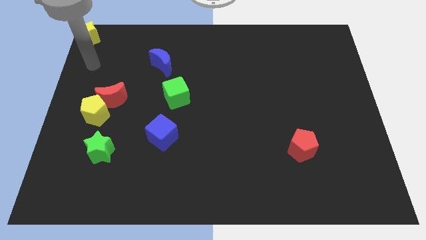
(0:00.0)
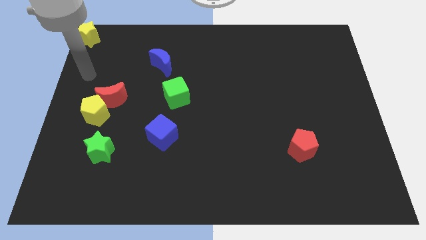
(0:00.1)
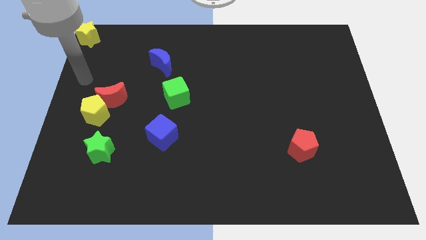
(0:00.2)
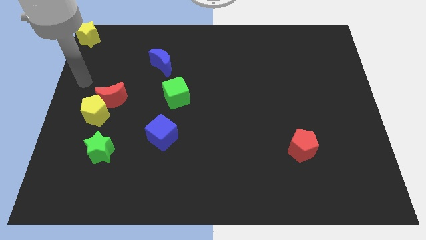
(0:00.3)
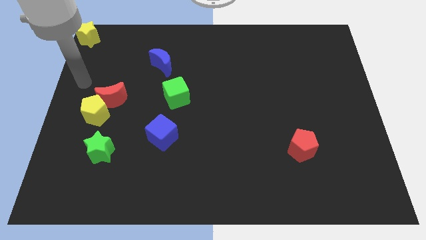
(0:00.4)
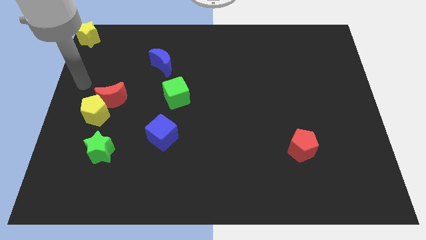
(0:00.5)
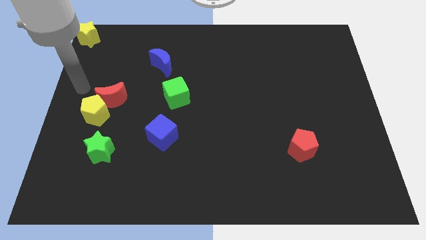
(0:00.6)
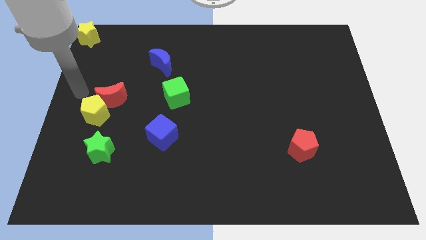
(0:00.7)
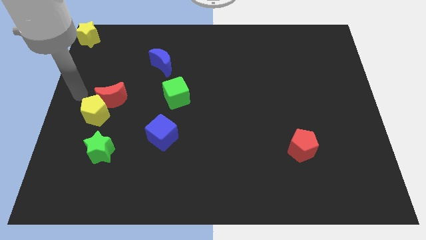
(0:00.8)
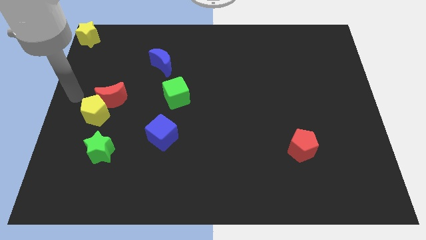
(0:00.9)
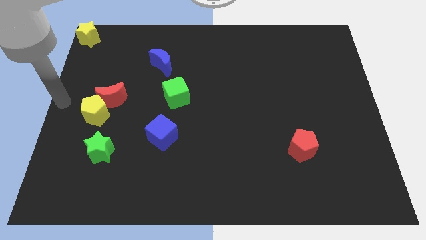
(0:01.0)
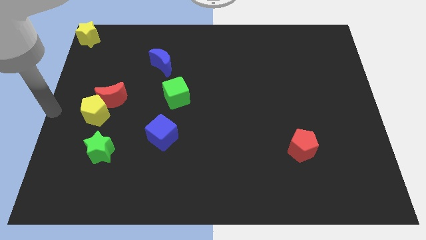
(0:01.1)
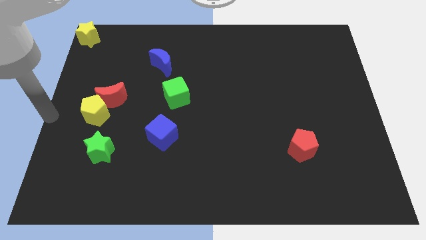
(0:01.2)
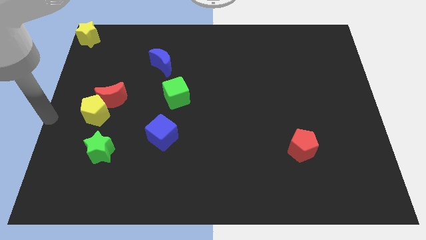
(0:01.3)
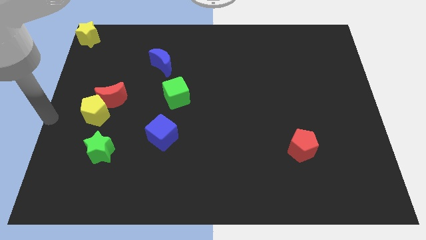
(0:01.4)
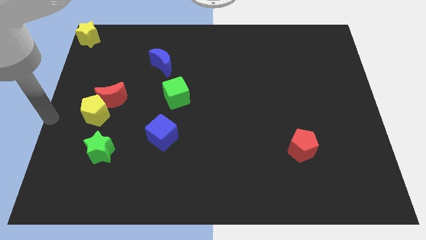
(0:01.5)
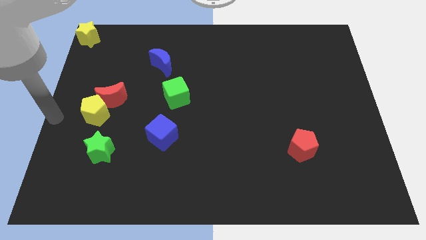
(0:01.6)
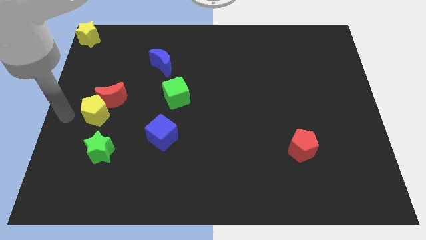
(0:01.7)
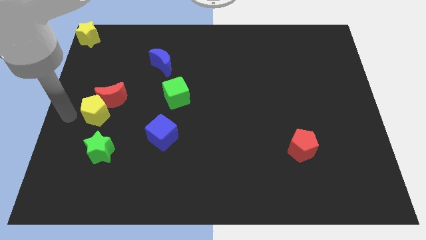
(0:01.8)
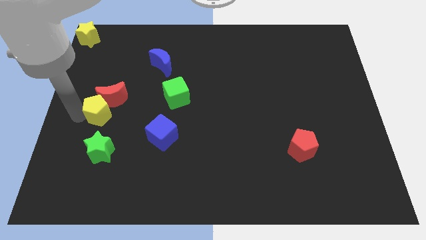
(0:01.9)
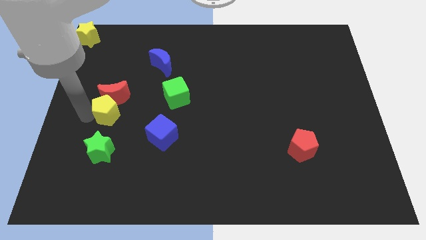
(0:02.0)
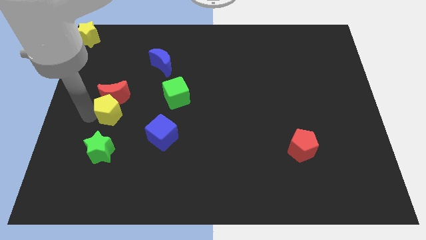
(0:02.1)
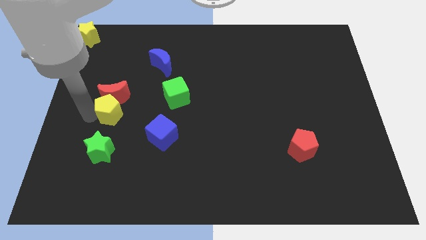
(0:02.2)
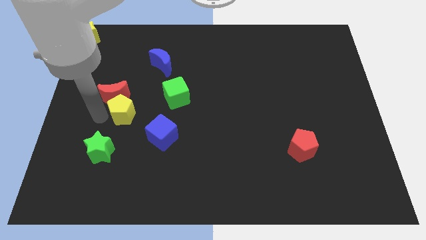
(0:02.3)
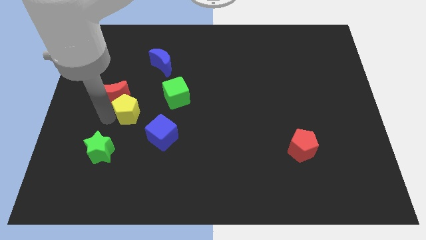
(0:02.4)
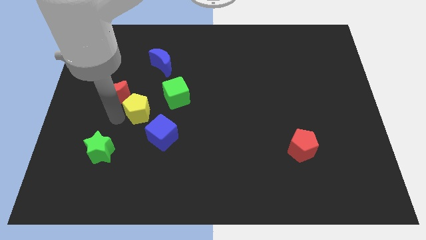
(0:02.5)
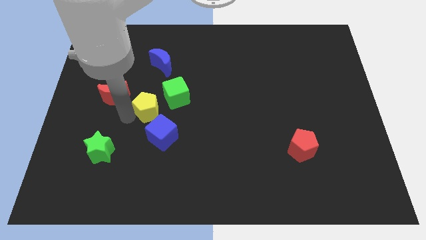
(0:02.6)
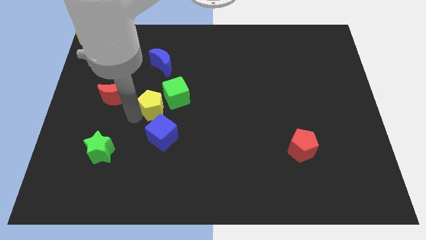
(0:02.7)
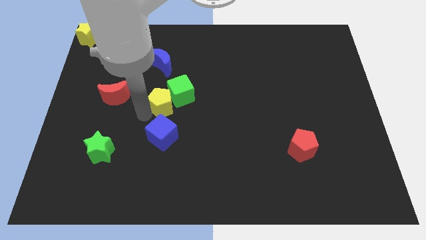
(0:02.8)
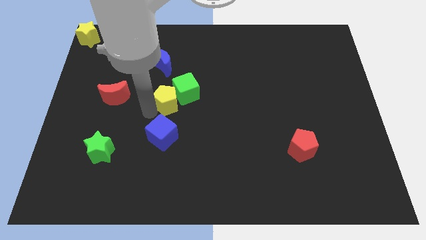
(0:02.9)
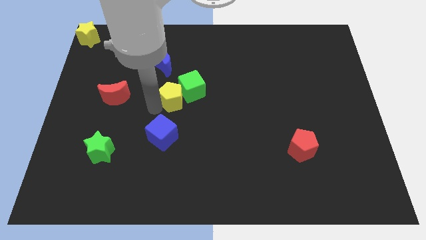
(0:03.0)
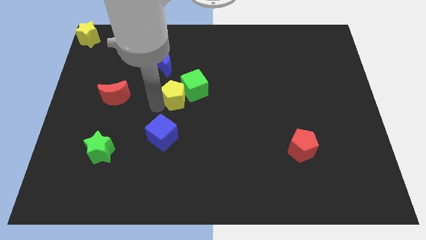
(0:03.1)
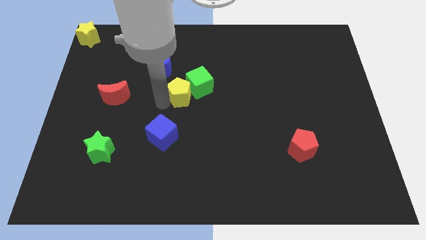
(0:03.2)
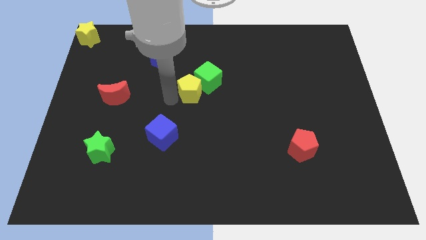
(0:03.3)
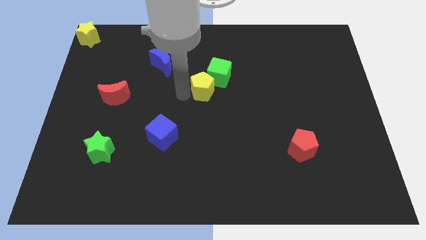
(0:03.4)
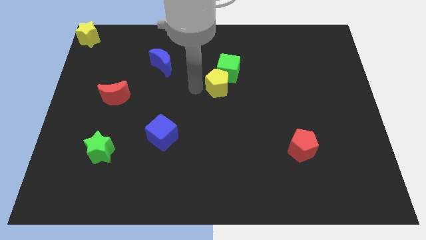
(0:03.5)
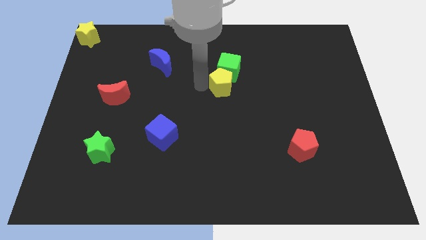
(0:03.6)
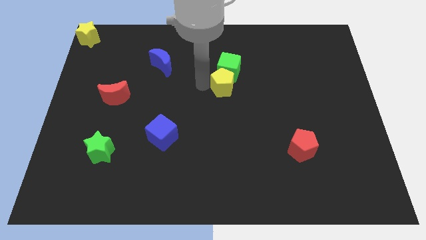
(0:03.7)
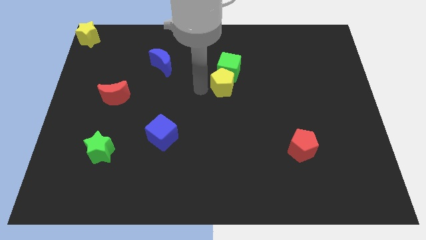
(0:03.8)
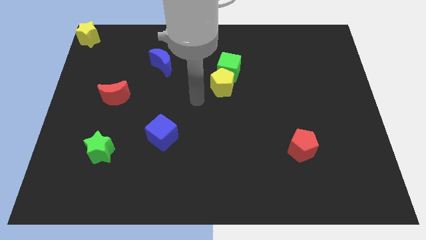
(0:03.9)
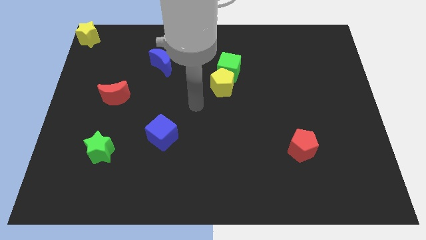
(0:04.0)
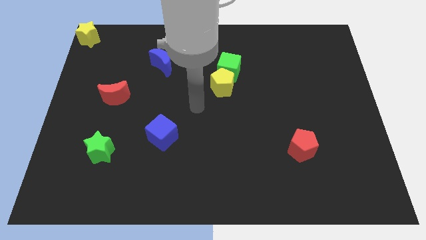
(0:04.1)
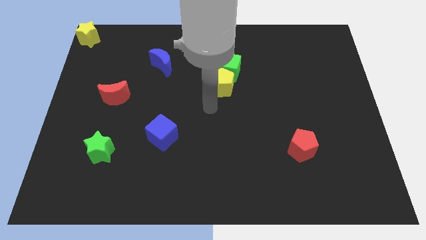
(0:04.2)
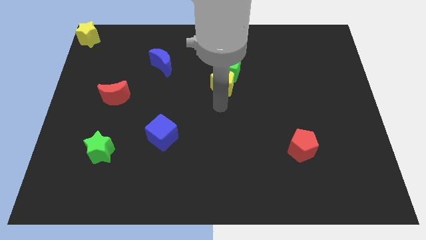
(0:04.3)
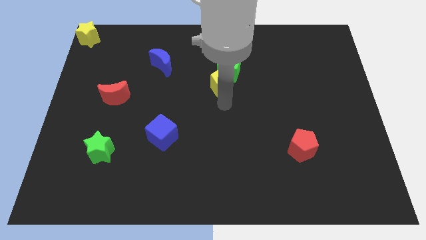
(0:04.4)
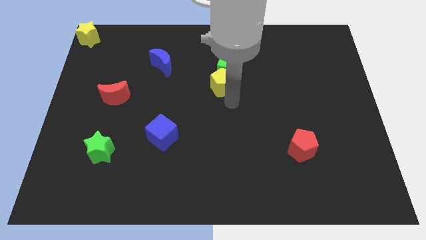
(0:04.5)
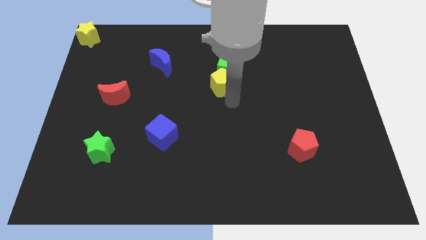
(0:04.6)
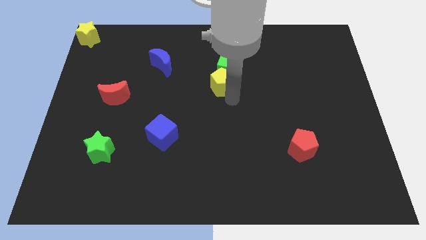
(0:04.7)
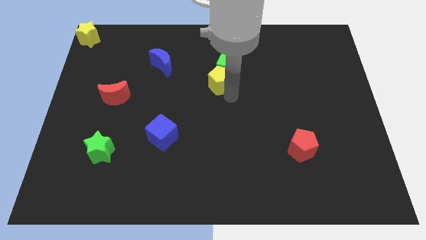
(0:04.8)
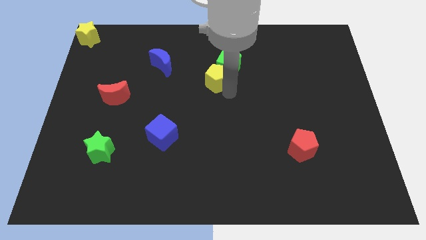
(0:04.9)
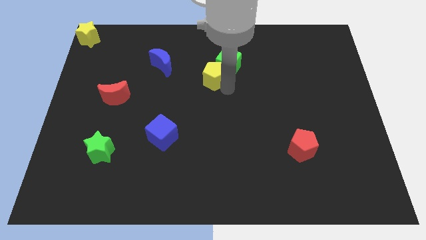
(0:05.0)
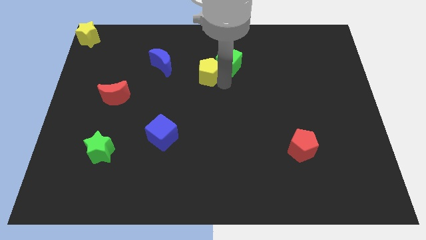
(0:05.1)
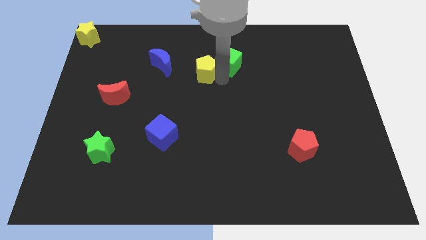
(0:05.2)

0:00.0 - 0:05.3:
move the yellow pentagon to the left of the green cube

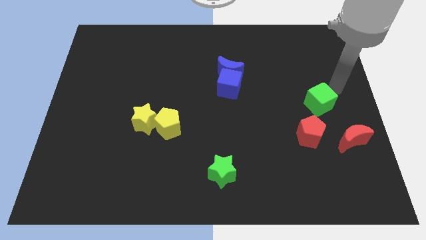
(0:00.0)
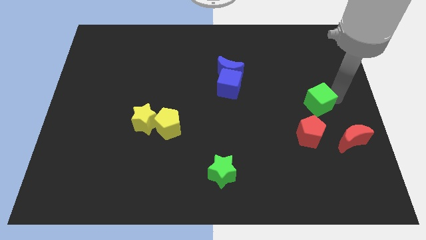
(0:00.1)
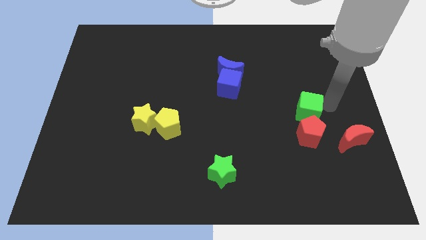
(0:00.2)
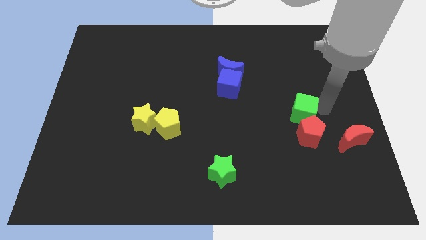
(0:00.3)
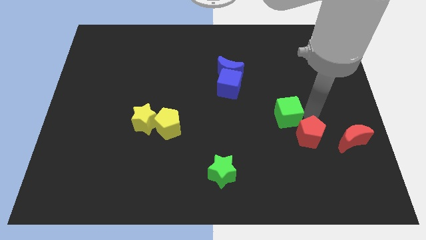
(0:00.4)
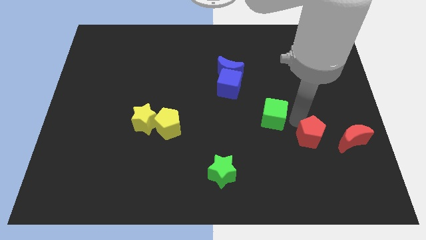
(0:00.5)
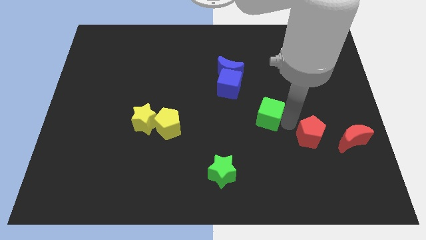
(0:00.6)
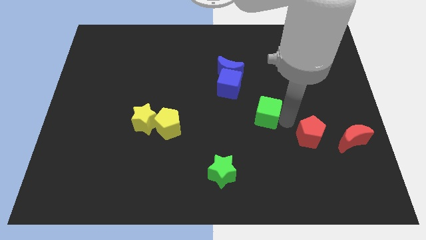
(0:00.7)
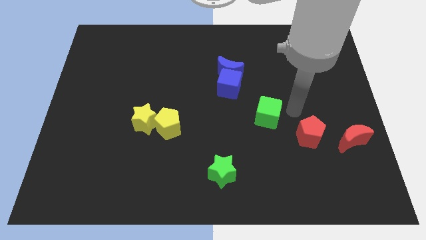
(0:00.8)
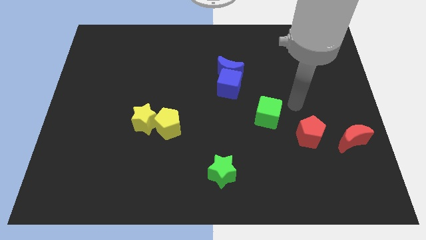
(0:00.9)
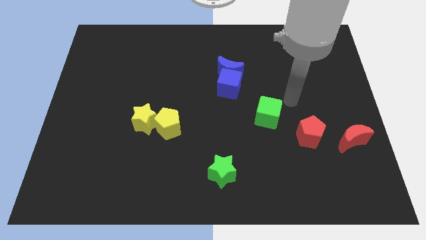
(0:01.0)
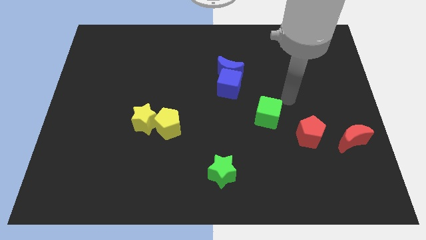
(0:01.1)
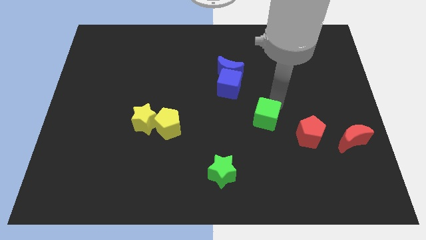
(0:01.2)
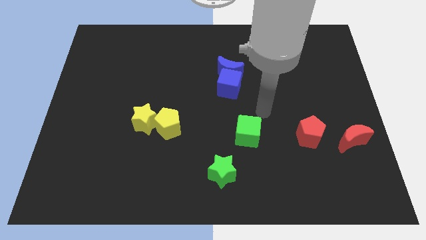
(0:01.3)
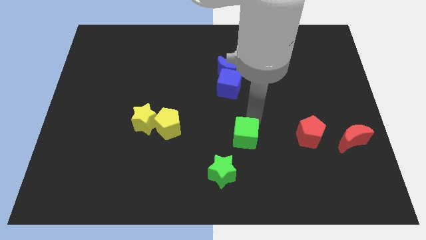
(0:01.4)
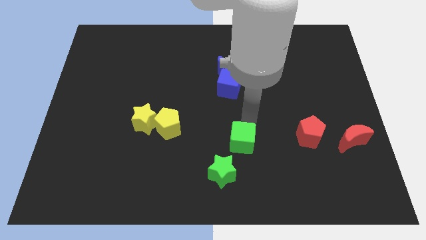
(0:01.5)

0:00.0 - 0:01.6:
push the green cube towards the green star

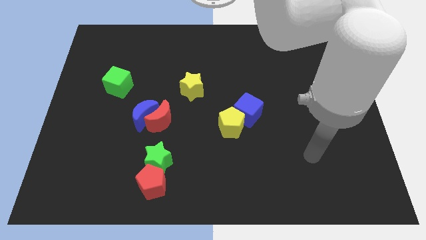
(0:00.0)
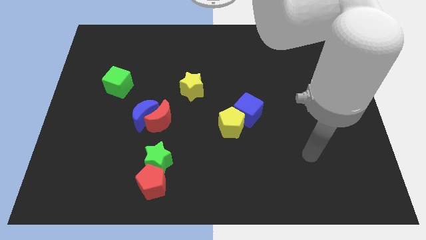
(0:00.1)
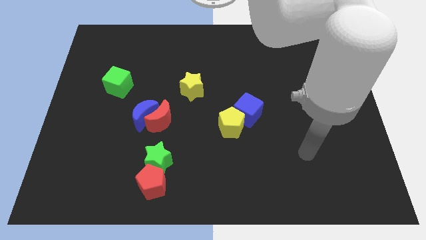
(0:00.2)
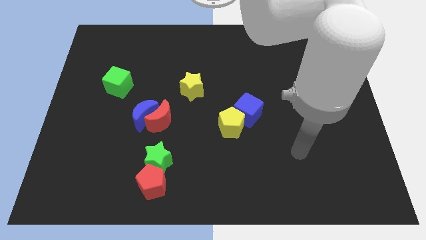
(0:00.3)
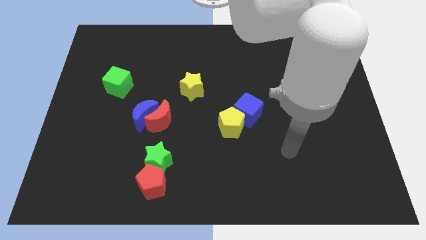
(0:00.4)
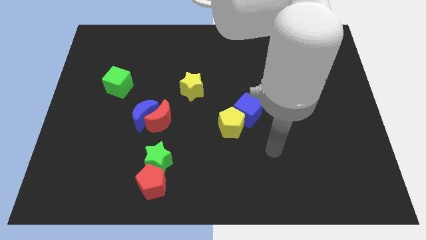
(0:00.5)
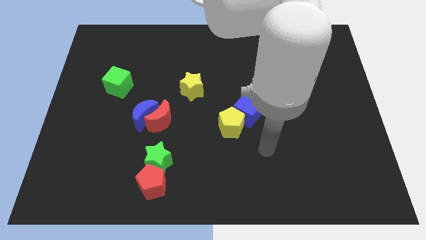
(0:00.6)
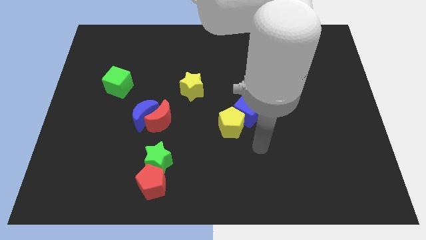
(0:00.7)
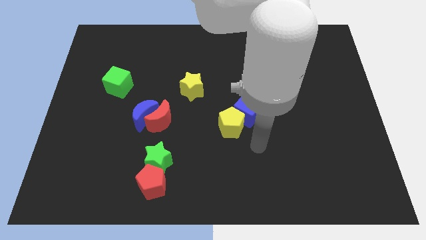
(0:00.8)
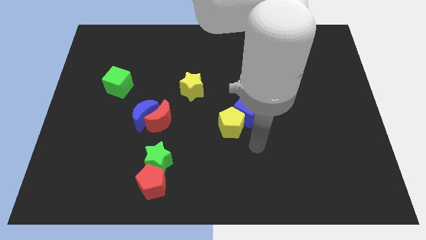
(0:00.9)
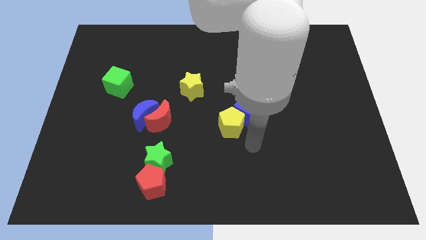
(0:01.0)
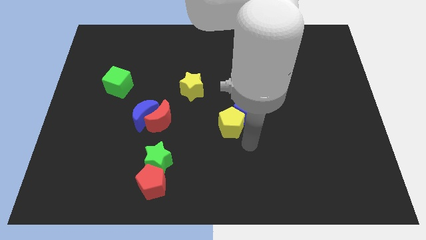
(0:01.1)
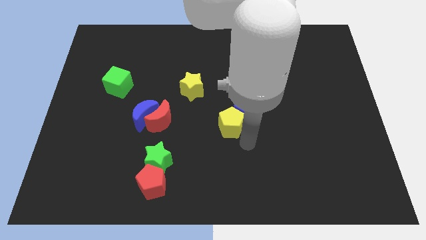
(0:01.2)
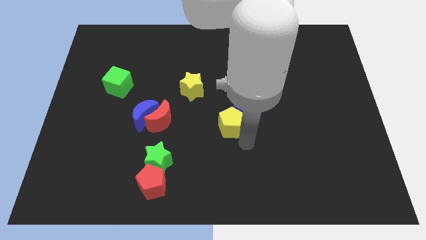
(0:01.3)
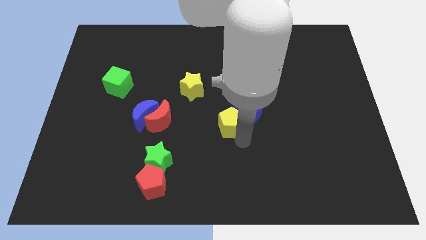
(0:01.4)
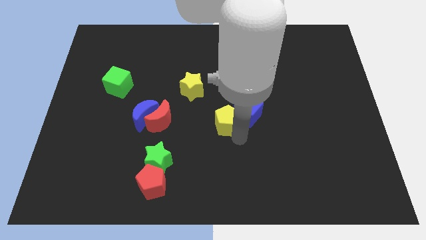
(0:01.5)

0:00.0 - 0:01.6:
slide the yellow pentagon towards the yellow star

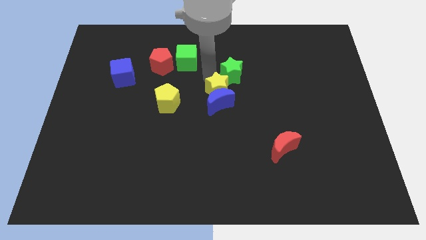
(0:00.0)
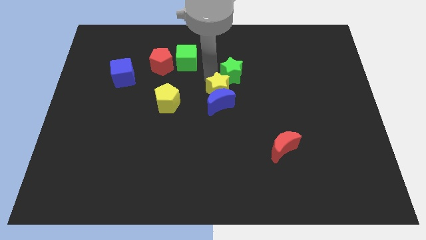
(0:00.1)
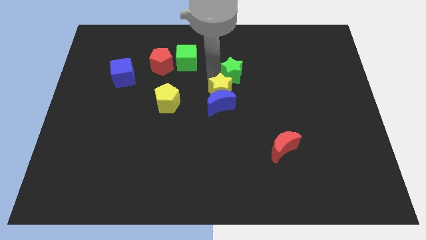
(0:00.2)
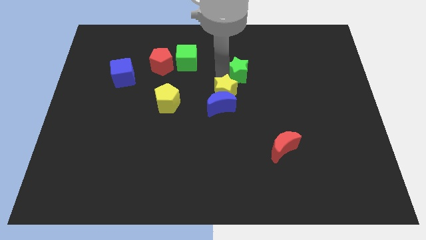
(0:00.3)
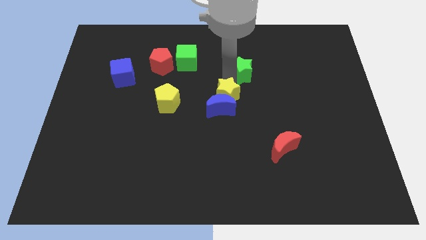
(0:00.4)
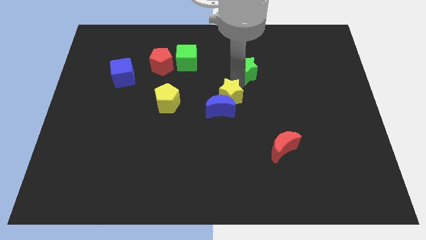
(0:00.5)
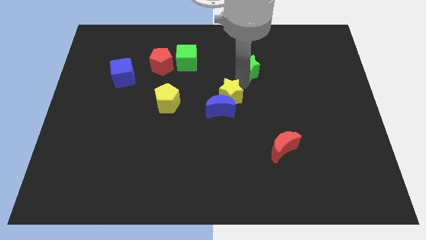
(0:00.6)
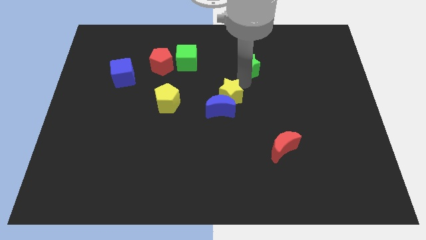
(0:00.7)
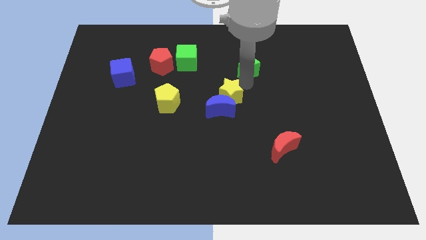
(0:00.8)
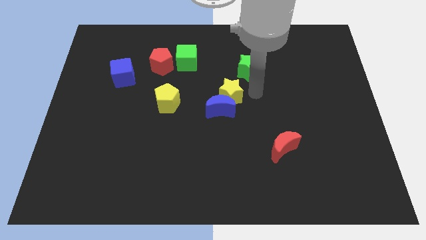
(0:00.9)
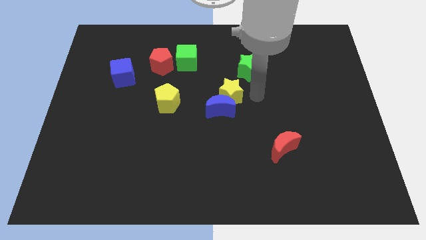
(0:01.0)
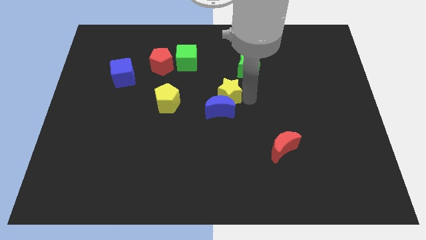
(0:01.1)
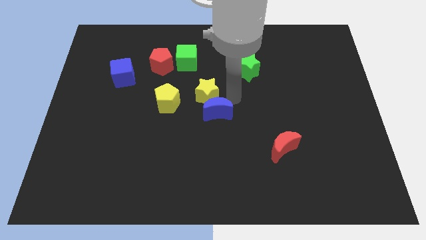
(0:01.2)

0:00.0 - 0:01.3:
separate the green star and the yellow star
